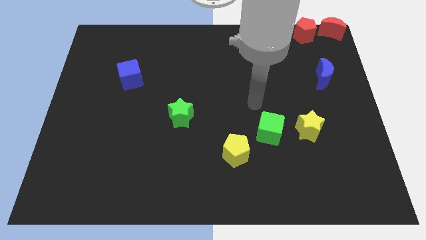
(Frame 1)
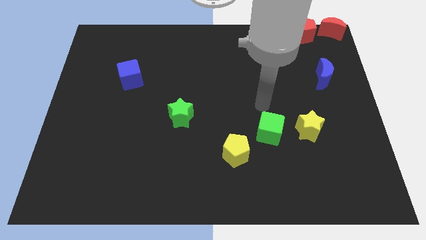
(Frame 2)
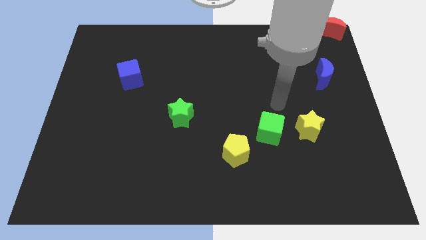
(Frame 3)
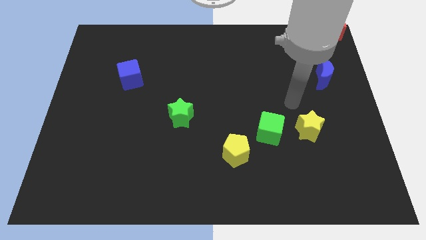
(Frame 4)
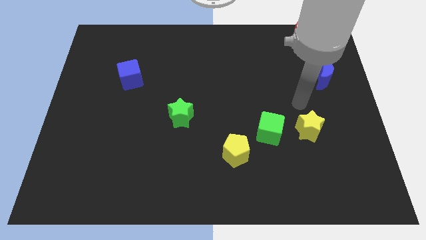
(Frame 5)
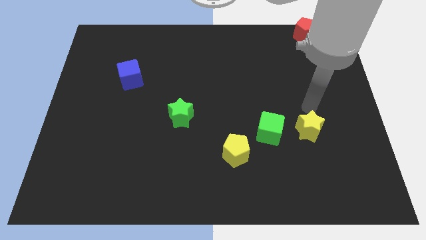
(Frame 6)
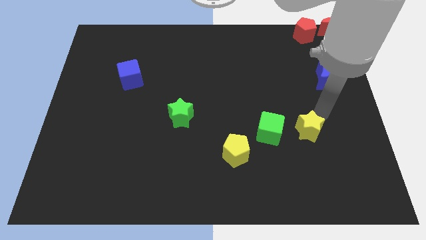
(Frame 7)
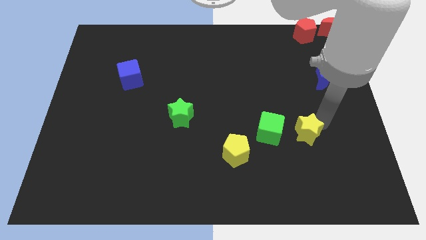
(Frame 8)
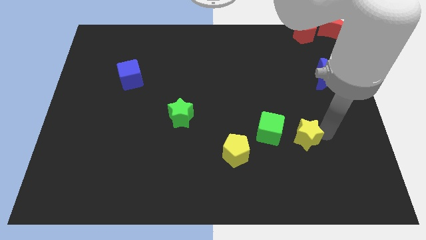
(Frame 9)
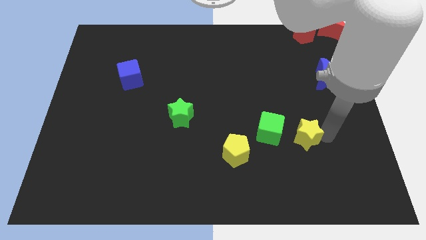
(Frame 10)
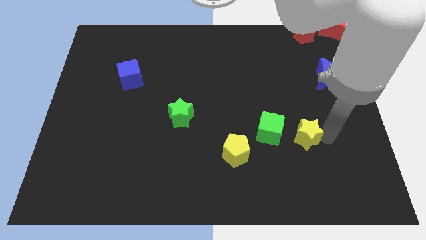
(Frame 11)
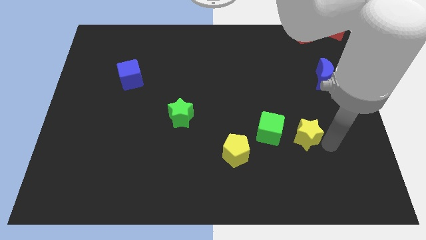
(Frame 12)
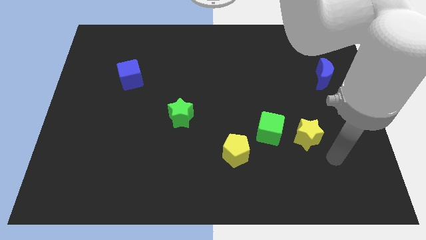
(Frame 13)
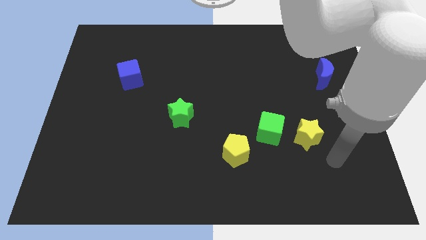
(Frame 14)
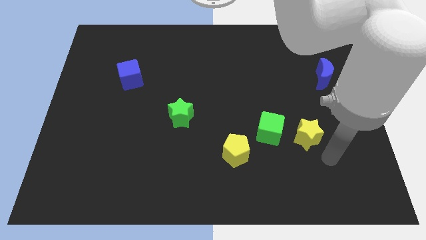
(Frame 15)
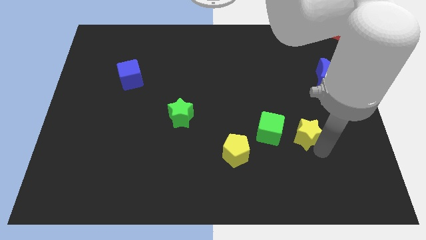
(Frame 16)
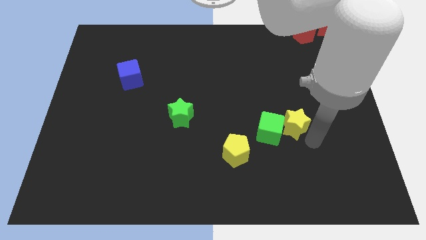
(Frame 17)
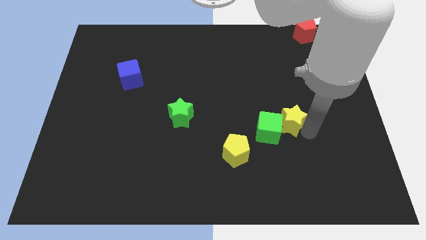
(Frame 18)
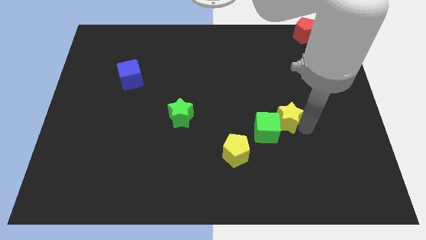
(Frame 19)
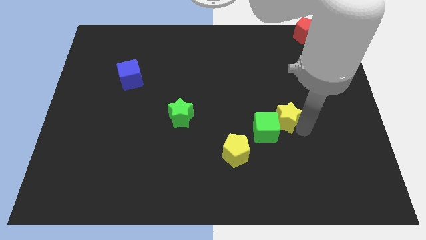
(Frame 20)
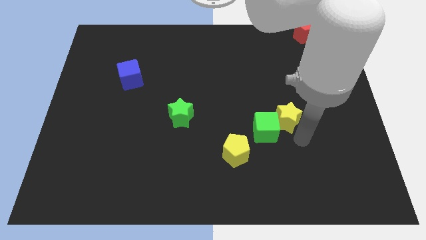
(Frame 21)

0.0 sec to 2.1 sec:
slide yellow star into green cube

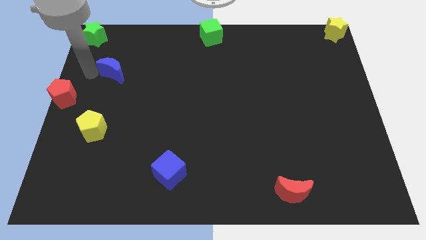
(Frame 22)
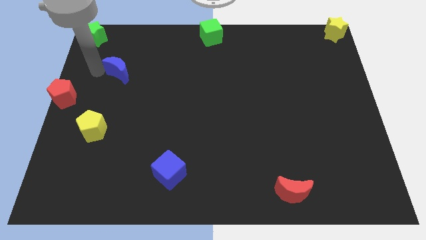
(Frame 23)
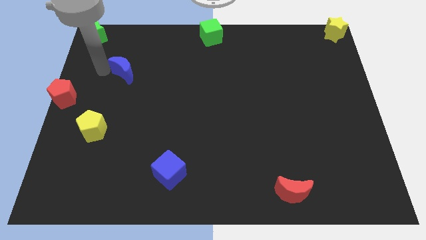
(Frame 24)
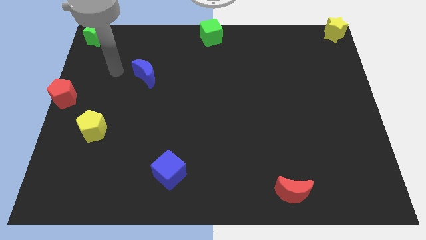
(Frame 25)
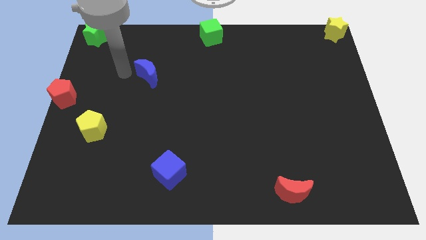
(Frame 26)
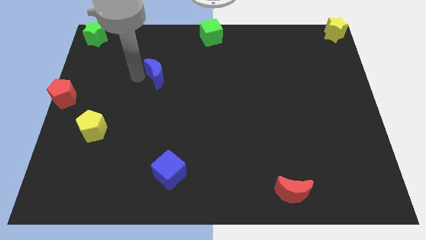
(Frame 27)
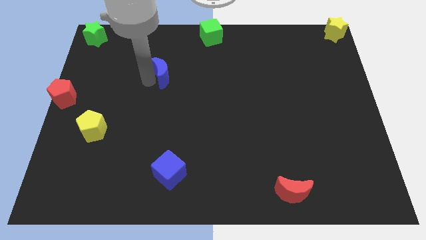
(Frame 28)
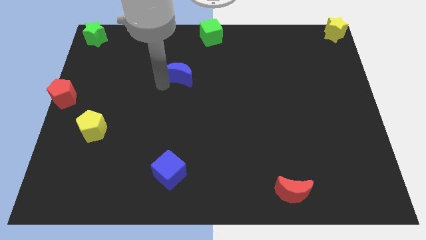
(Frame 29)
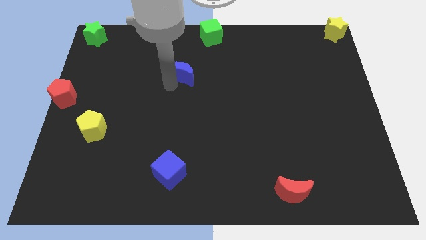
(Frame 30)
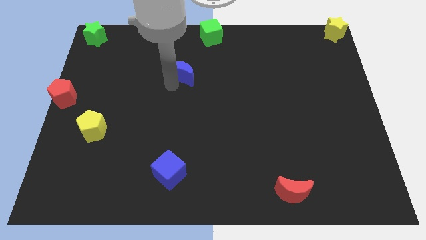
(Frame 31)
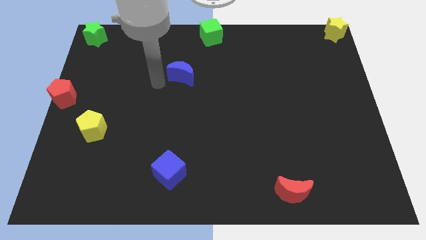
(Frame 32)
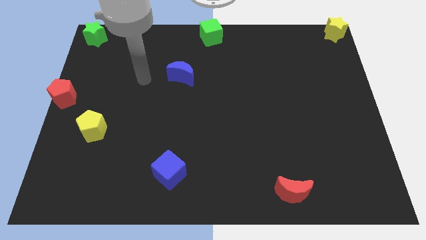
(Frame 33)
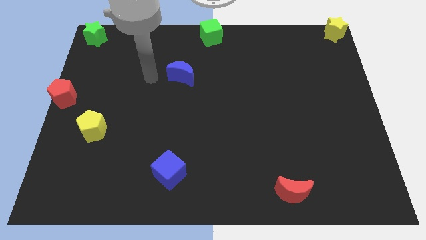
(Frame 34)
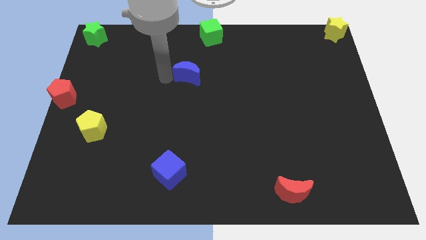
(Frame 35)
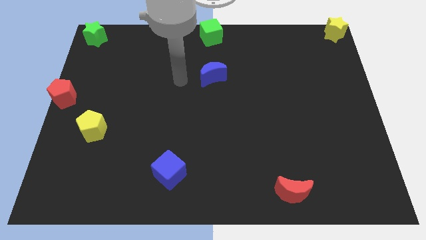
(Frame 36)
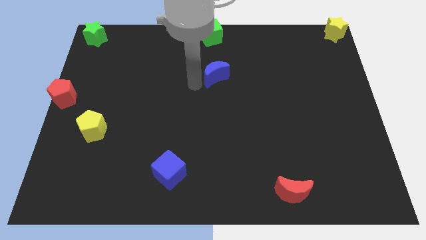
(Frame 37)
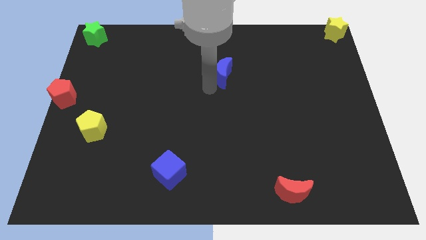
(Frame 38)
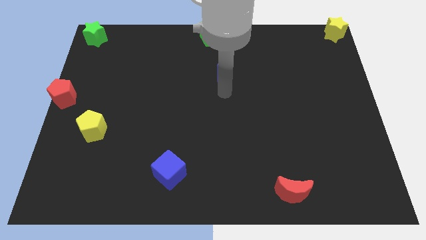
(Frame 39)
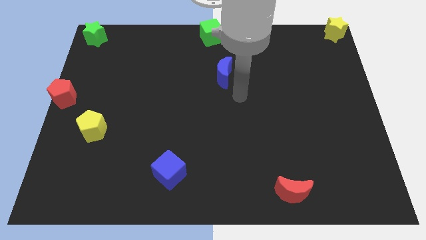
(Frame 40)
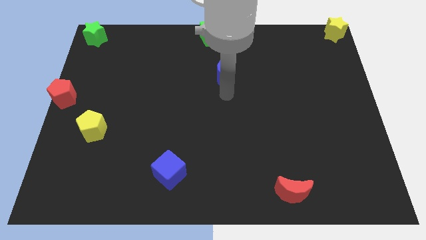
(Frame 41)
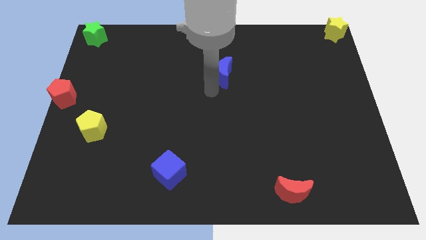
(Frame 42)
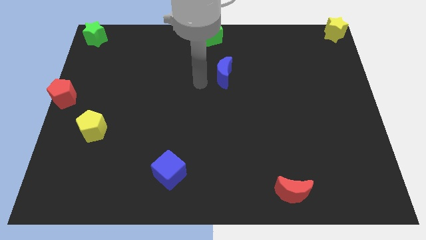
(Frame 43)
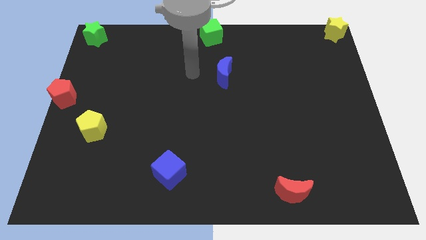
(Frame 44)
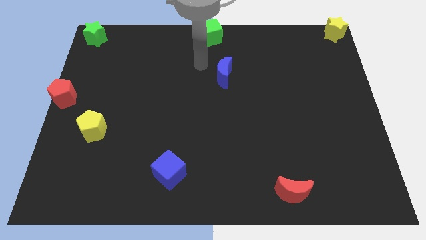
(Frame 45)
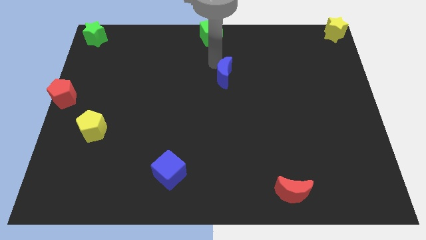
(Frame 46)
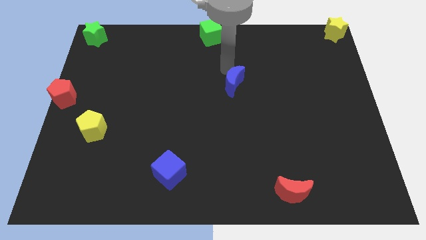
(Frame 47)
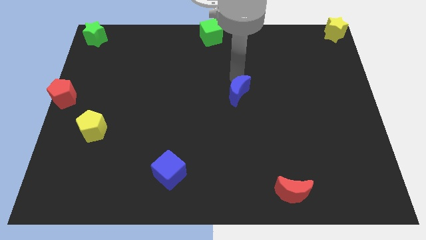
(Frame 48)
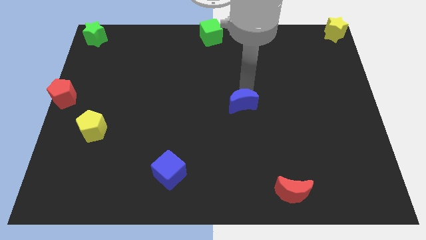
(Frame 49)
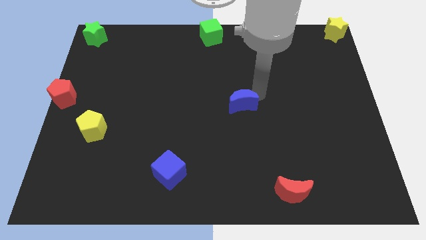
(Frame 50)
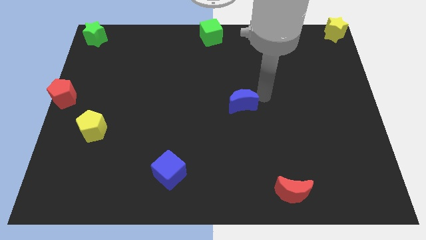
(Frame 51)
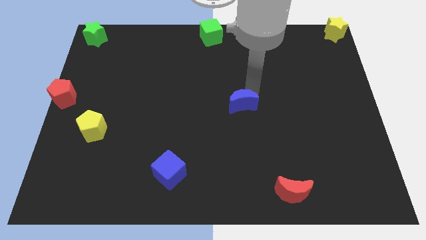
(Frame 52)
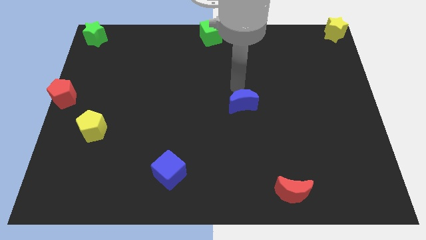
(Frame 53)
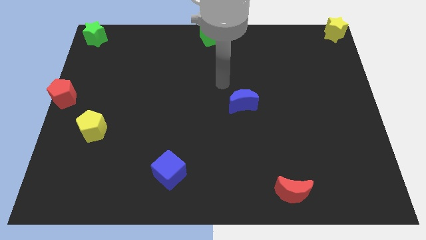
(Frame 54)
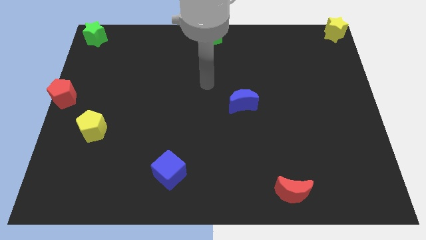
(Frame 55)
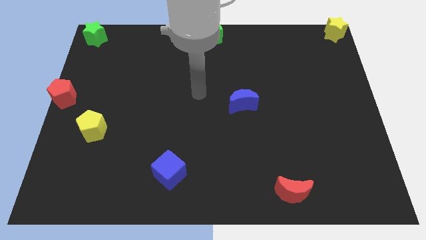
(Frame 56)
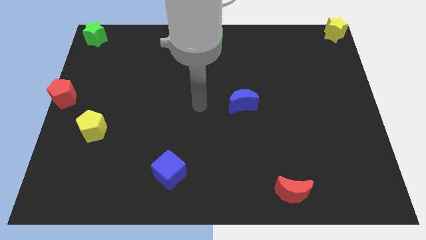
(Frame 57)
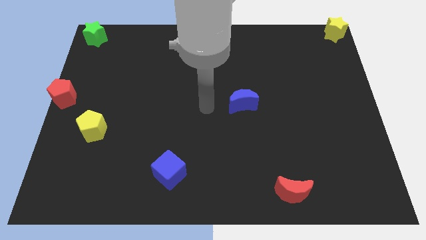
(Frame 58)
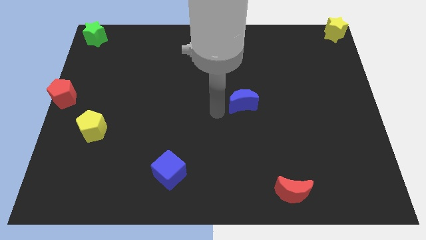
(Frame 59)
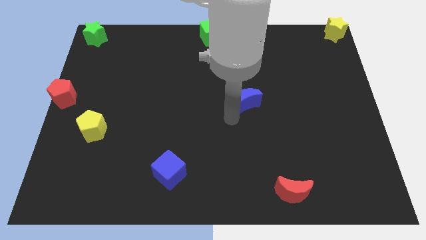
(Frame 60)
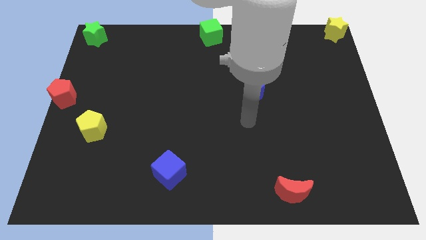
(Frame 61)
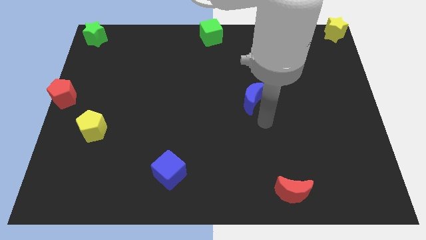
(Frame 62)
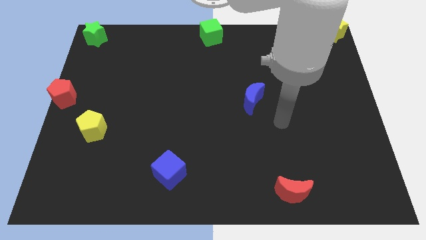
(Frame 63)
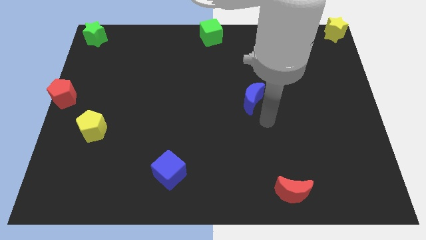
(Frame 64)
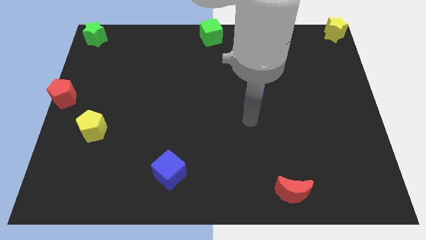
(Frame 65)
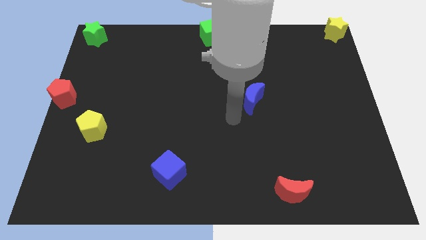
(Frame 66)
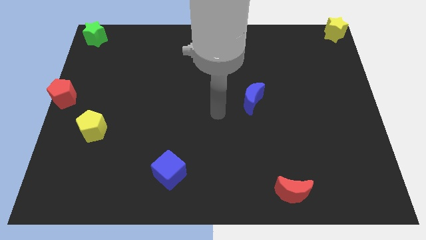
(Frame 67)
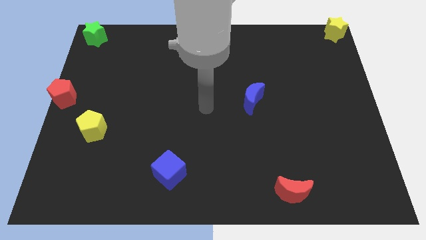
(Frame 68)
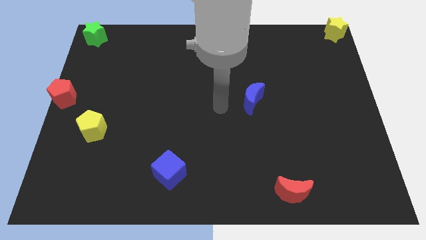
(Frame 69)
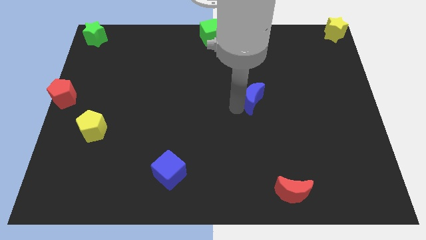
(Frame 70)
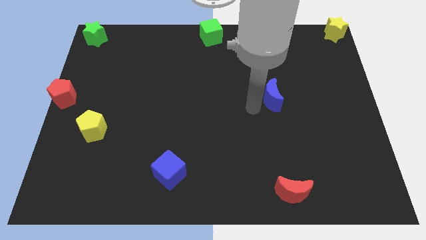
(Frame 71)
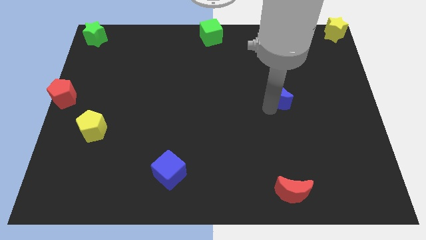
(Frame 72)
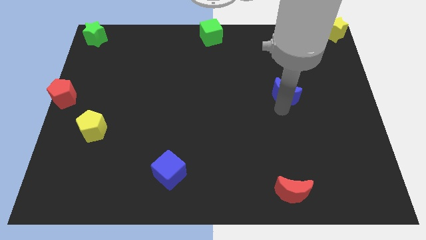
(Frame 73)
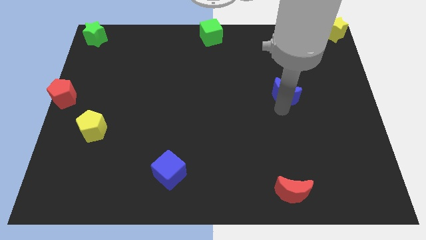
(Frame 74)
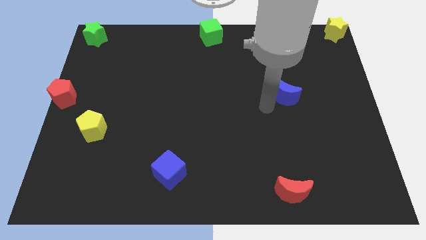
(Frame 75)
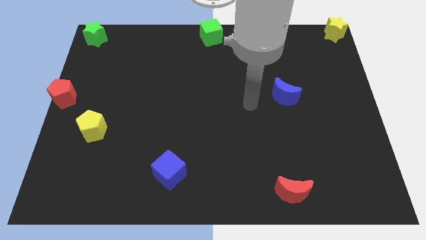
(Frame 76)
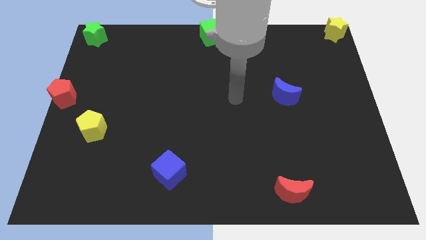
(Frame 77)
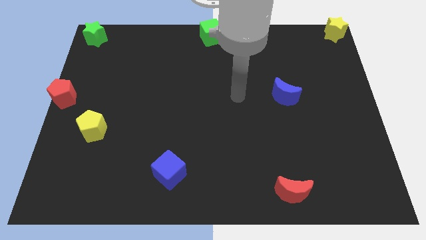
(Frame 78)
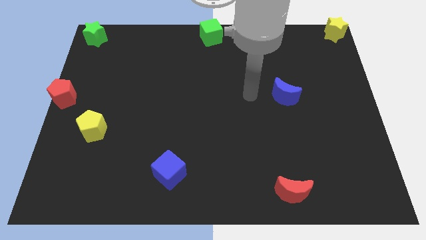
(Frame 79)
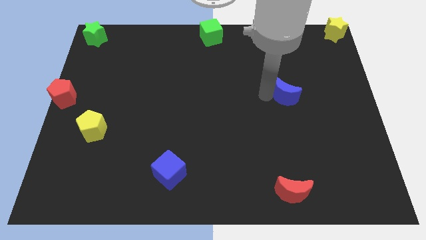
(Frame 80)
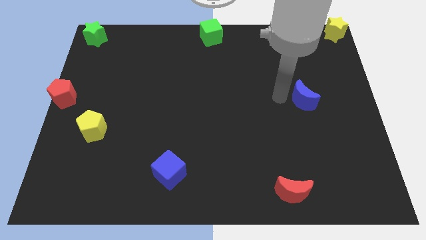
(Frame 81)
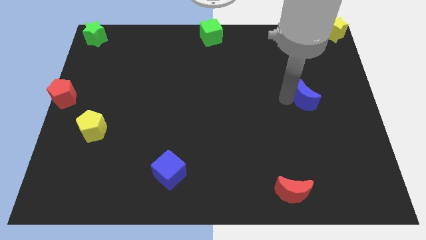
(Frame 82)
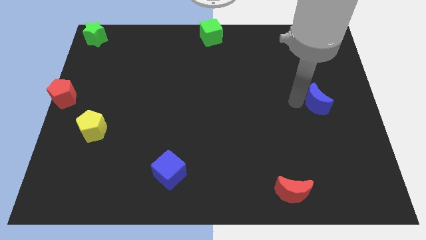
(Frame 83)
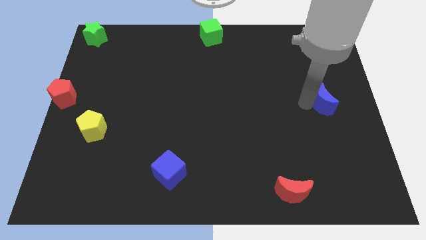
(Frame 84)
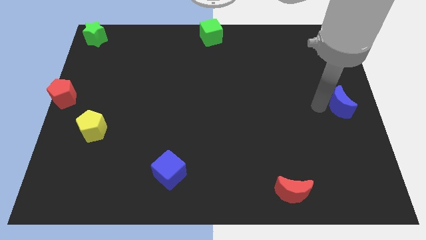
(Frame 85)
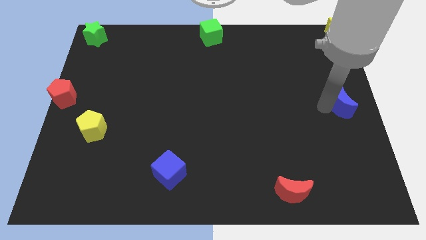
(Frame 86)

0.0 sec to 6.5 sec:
drag the blue crescent diagonally top right to the red moon

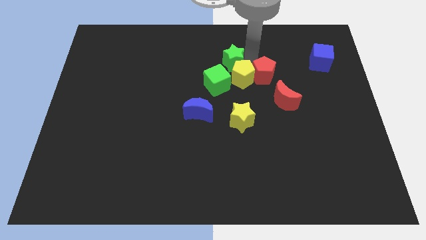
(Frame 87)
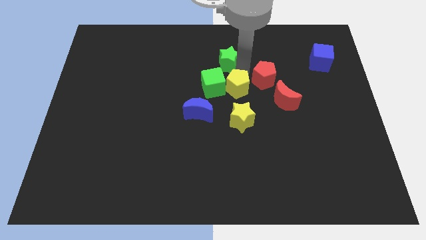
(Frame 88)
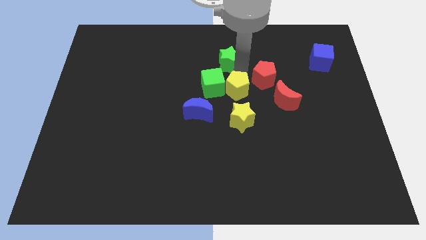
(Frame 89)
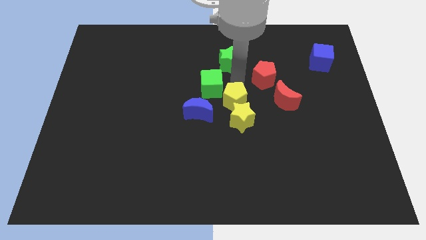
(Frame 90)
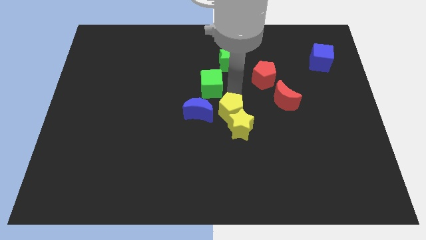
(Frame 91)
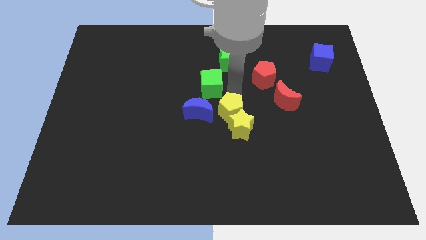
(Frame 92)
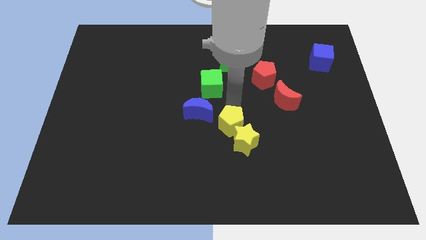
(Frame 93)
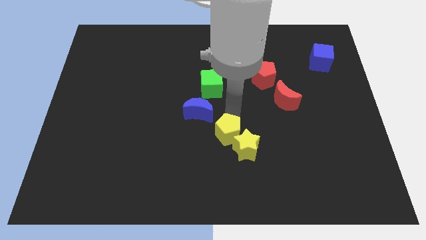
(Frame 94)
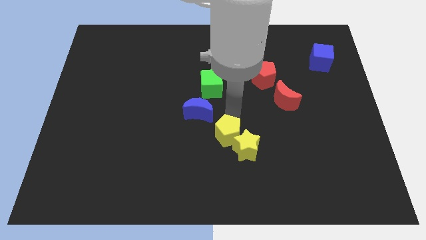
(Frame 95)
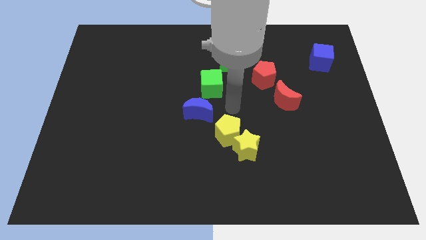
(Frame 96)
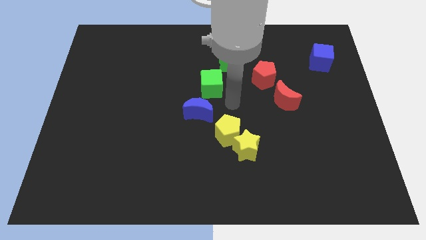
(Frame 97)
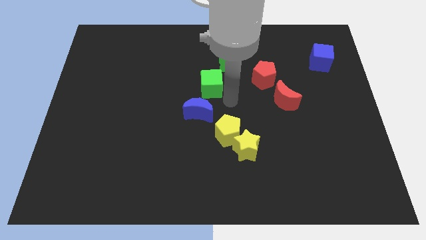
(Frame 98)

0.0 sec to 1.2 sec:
push the yellow pentagon into yellow star
